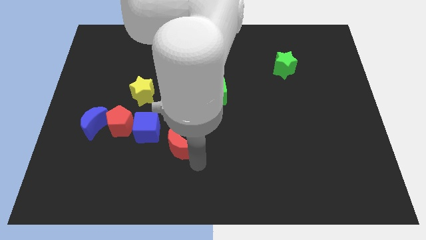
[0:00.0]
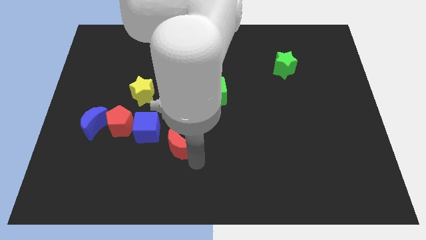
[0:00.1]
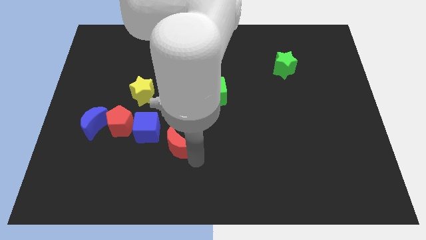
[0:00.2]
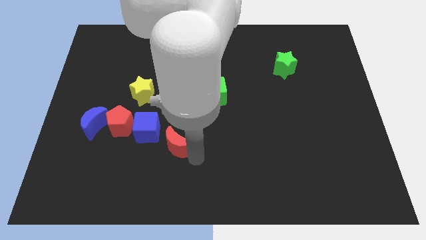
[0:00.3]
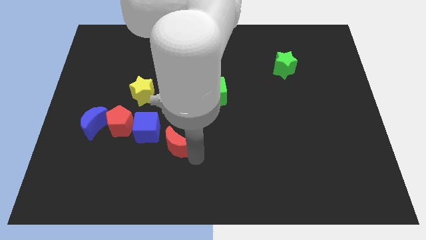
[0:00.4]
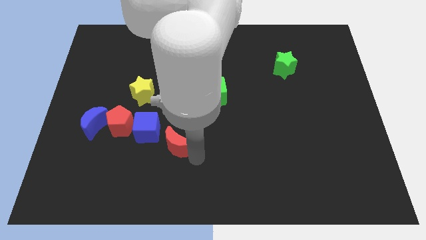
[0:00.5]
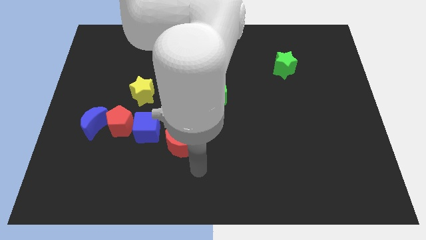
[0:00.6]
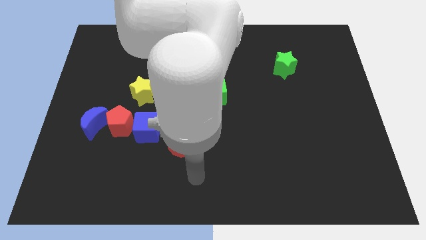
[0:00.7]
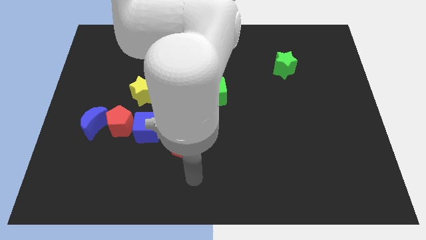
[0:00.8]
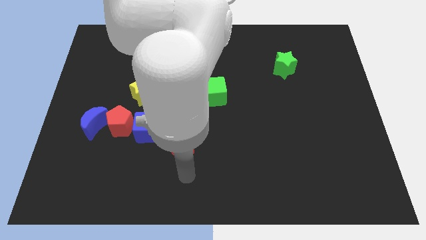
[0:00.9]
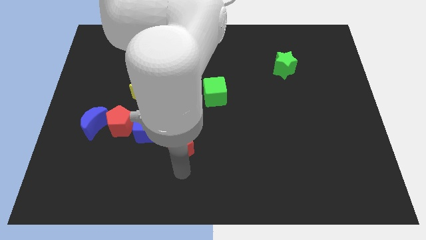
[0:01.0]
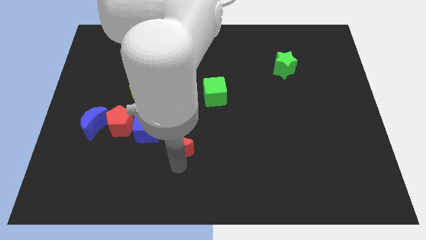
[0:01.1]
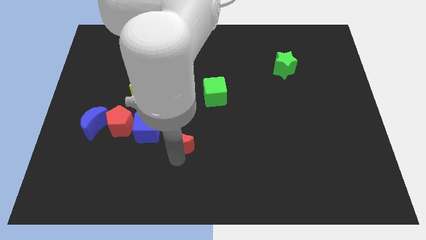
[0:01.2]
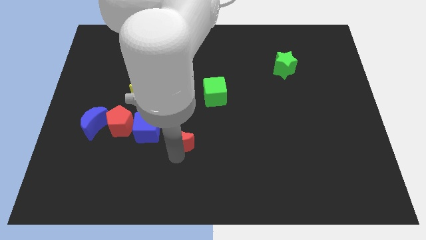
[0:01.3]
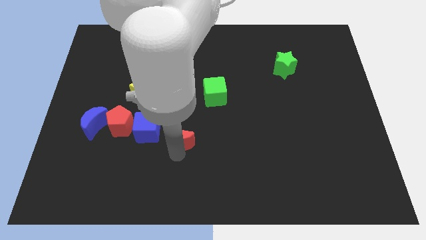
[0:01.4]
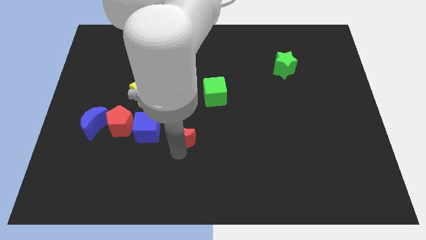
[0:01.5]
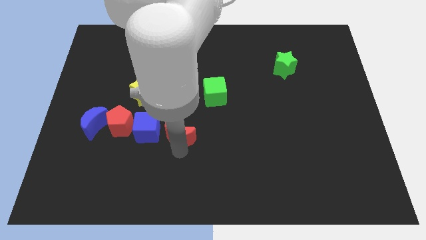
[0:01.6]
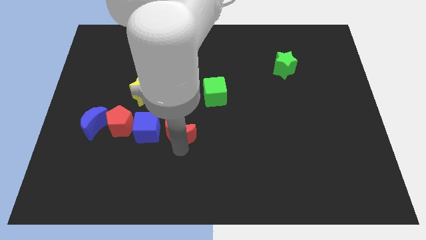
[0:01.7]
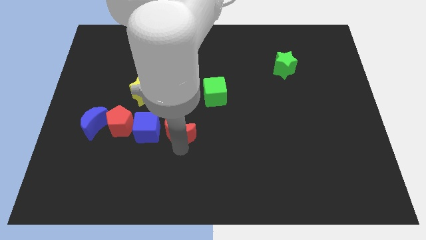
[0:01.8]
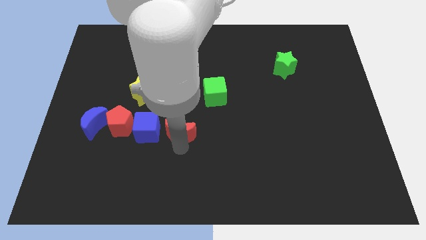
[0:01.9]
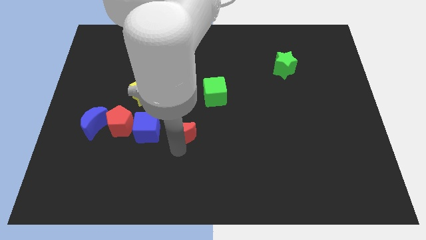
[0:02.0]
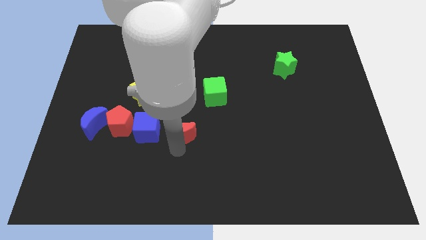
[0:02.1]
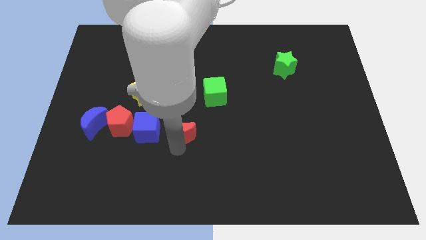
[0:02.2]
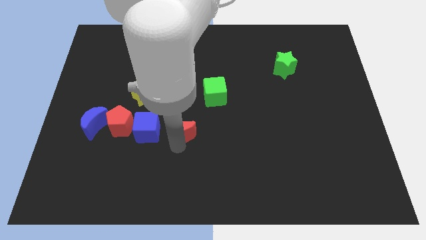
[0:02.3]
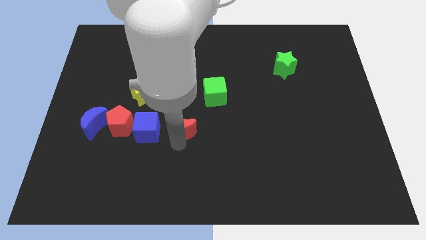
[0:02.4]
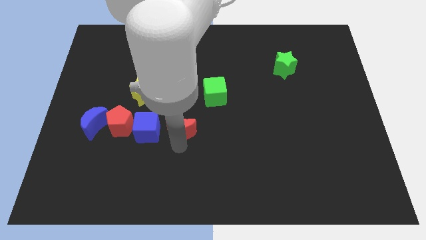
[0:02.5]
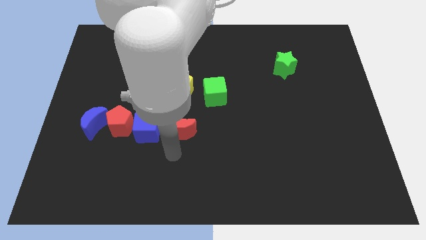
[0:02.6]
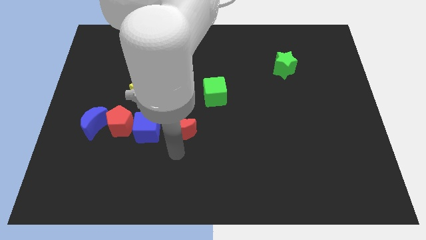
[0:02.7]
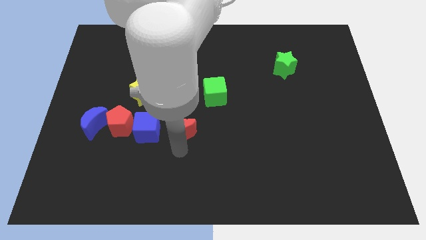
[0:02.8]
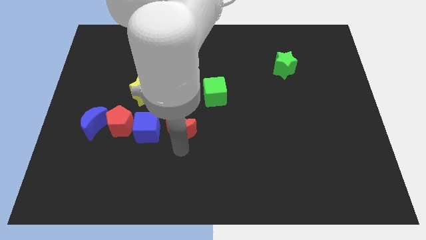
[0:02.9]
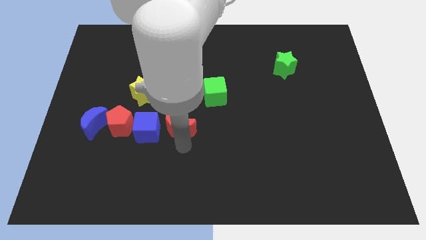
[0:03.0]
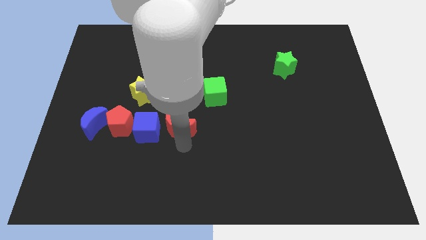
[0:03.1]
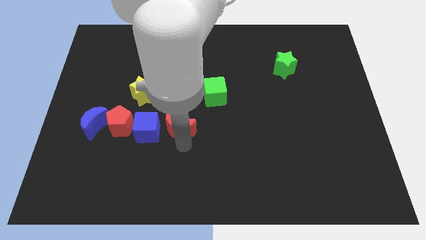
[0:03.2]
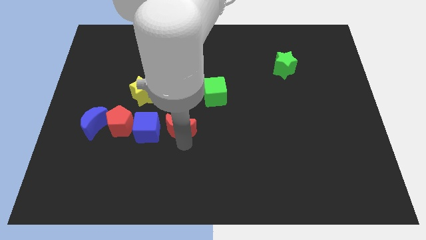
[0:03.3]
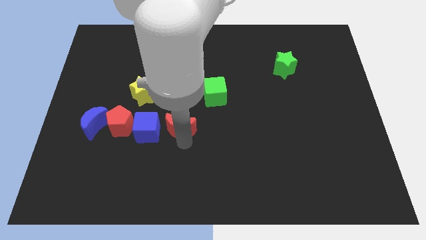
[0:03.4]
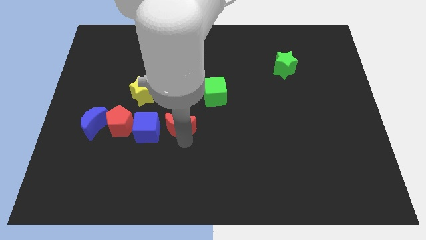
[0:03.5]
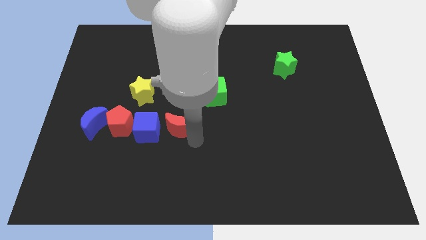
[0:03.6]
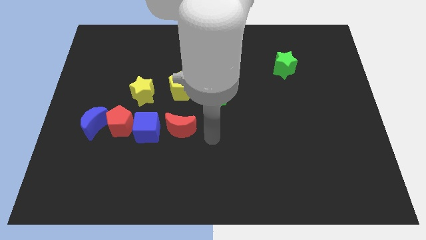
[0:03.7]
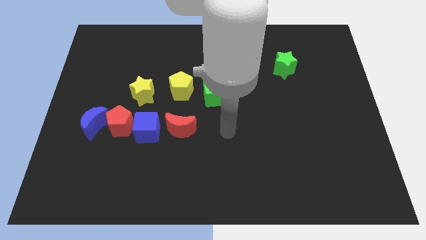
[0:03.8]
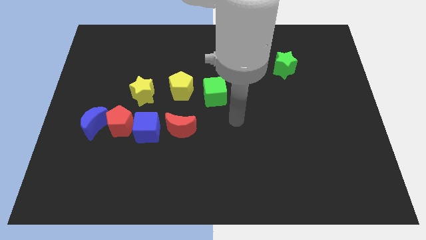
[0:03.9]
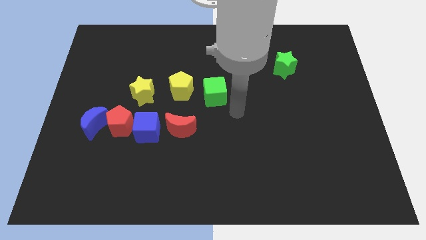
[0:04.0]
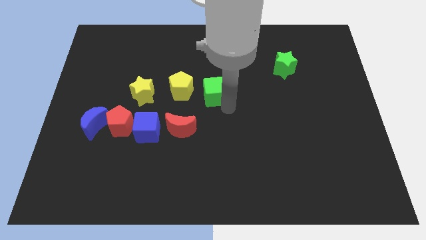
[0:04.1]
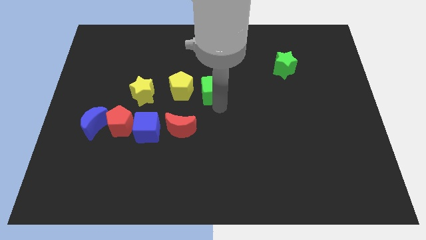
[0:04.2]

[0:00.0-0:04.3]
place the red moon to the right of the blue cube

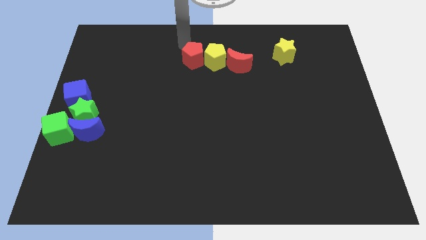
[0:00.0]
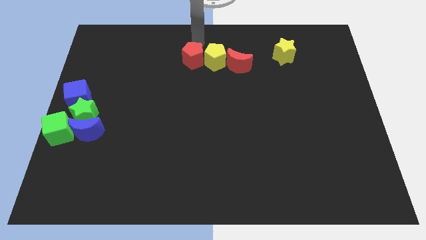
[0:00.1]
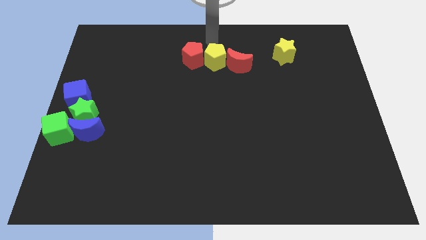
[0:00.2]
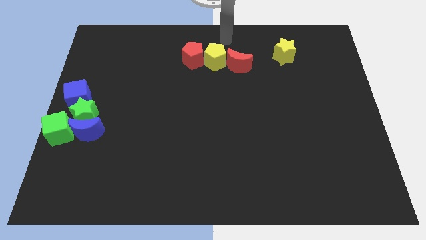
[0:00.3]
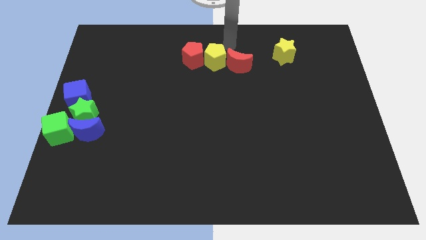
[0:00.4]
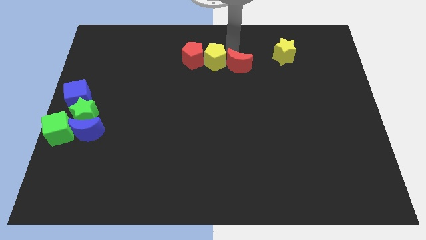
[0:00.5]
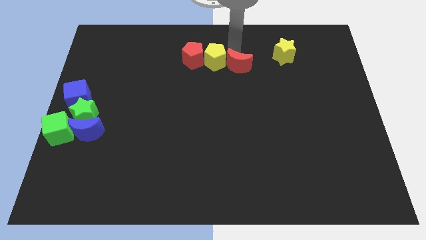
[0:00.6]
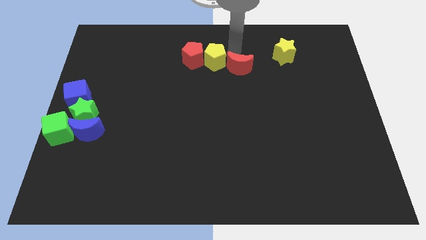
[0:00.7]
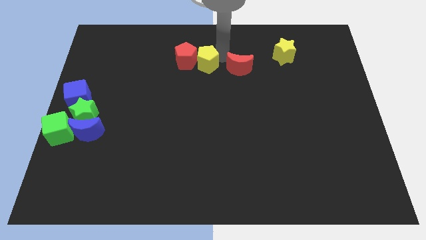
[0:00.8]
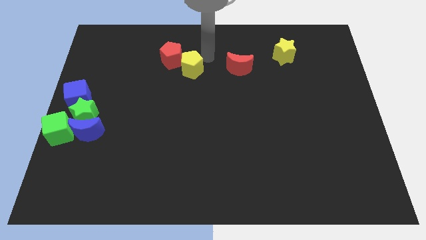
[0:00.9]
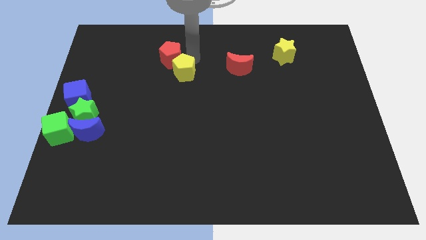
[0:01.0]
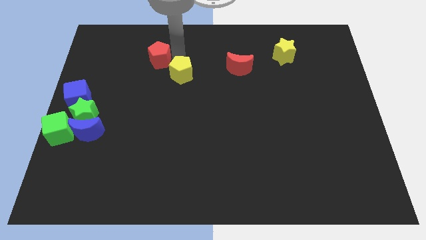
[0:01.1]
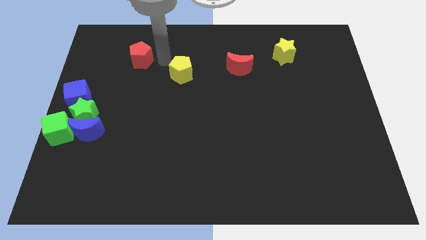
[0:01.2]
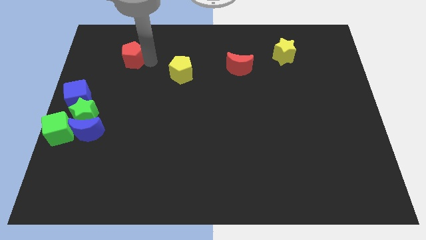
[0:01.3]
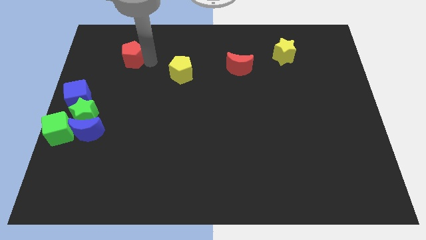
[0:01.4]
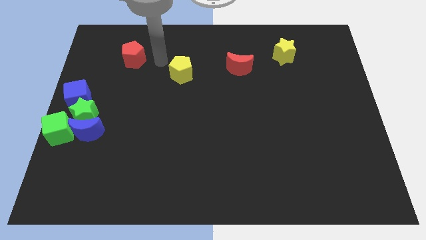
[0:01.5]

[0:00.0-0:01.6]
move the yellow pentagon and red pentagon away from the red crescent

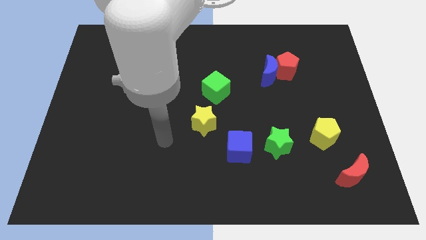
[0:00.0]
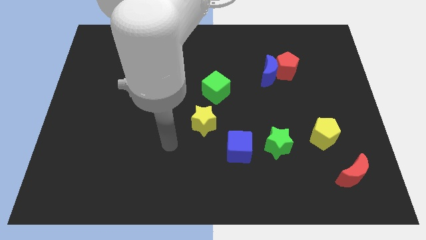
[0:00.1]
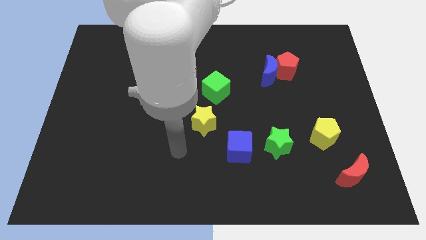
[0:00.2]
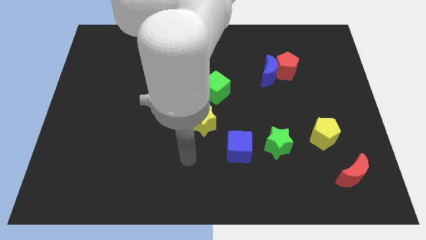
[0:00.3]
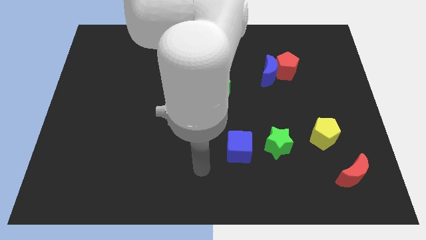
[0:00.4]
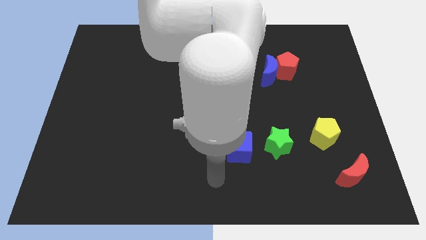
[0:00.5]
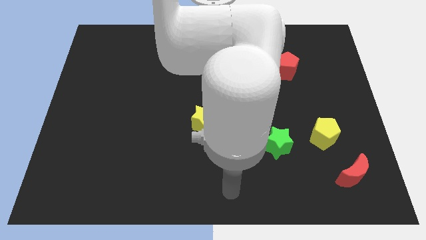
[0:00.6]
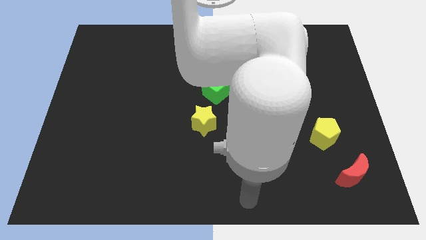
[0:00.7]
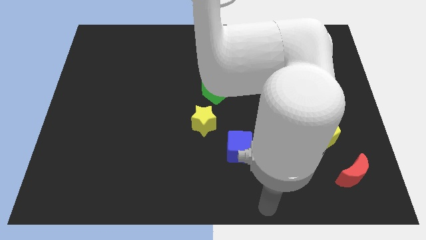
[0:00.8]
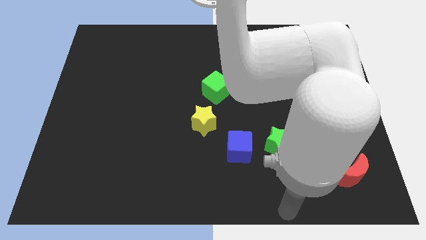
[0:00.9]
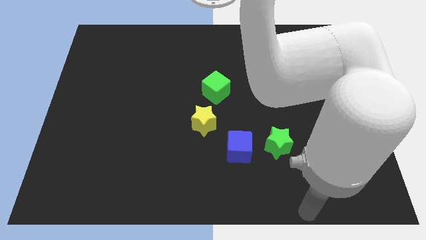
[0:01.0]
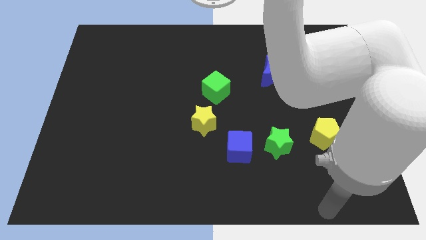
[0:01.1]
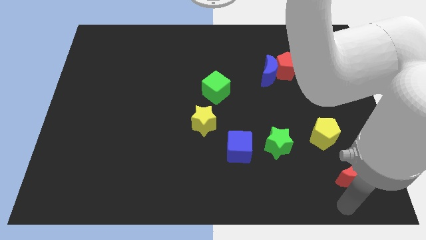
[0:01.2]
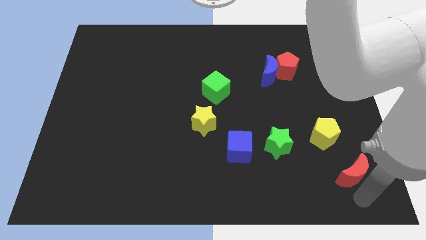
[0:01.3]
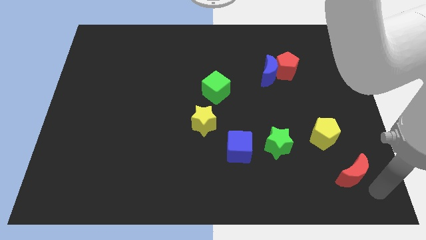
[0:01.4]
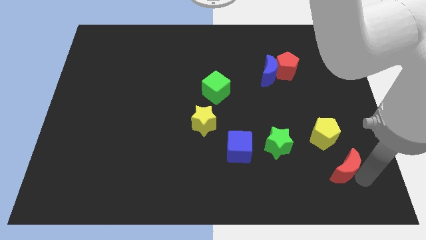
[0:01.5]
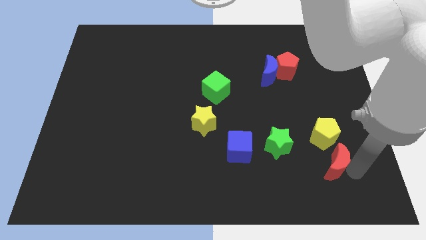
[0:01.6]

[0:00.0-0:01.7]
touch the red moon

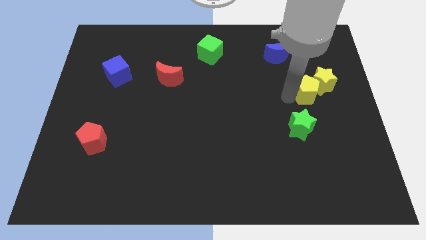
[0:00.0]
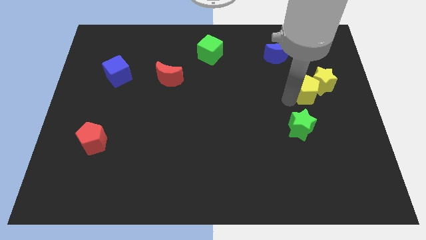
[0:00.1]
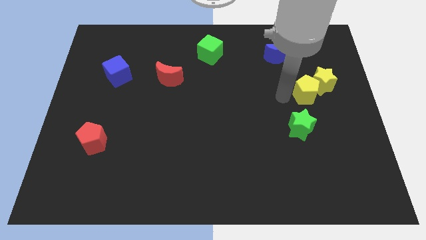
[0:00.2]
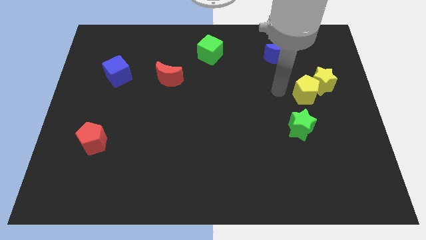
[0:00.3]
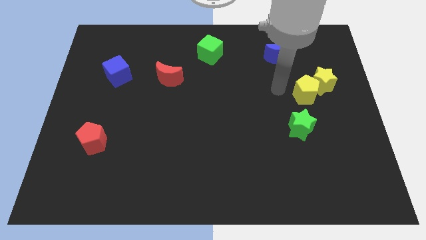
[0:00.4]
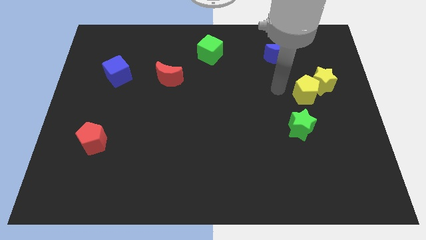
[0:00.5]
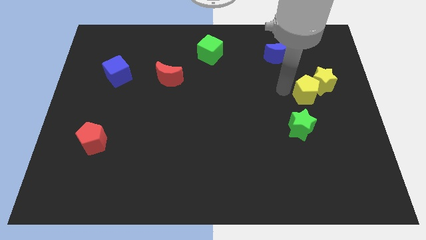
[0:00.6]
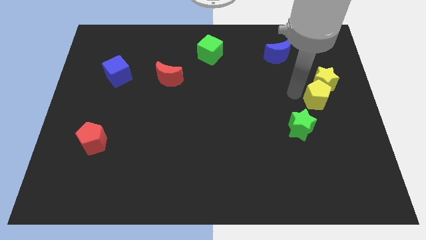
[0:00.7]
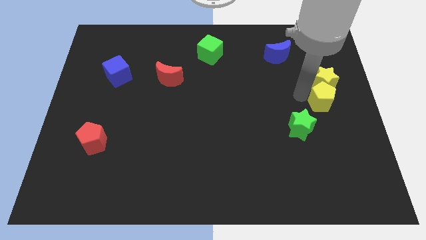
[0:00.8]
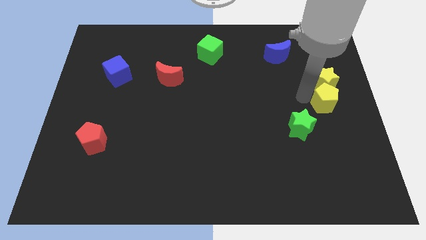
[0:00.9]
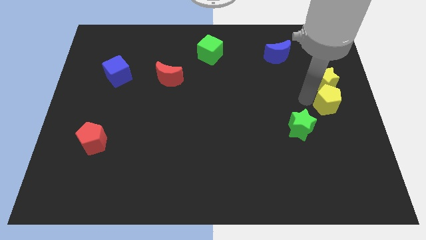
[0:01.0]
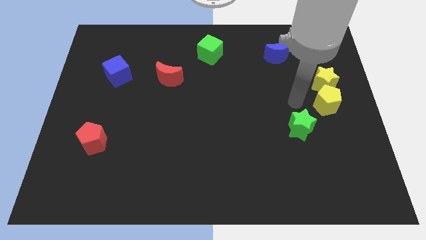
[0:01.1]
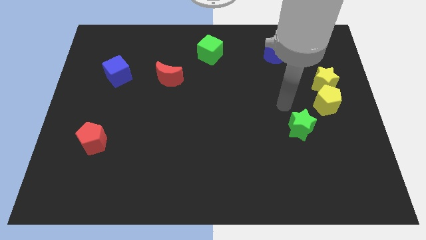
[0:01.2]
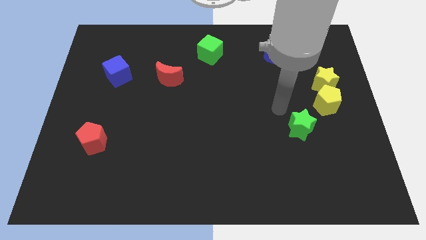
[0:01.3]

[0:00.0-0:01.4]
put the yellow pentagon below the yellow star
